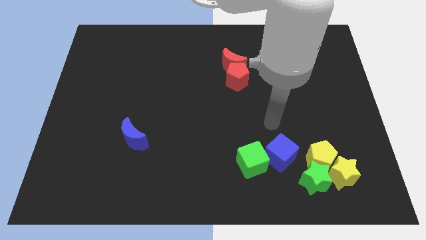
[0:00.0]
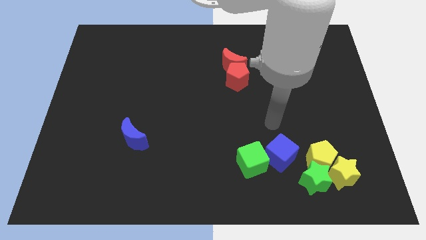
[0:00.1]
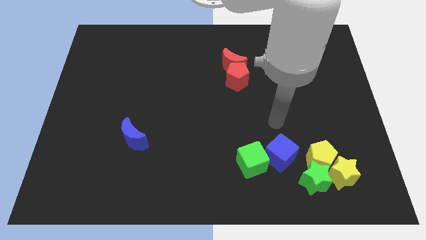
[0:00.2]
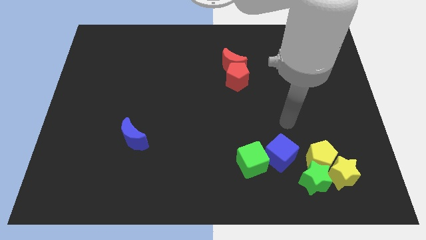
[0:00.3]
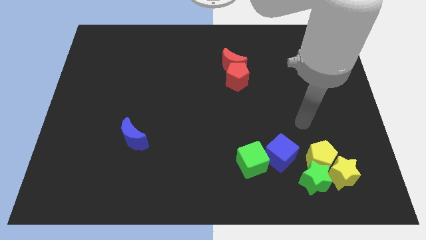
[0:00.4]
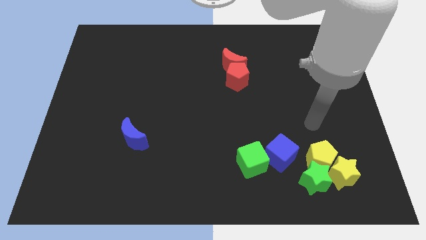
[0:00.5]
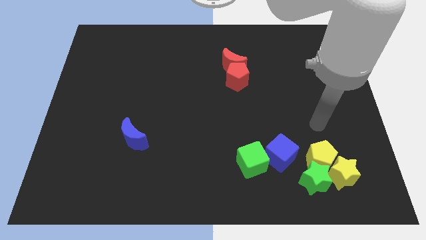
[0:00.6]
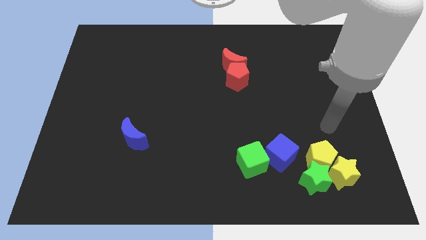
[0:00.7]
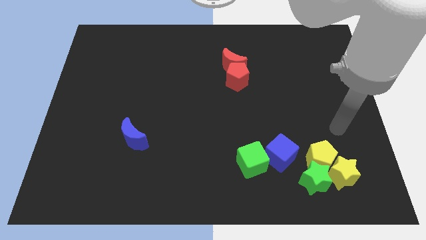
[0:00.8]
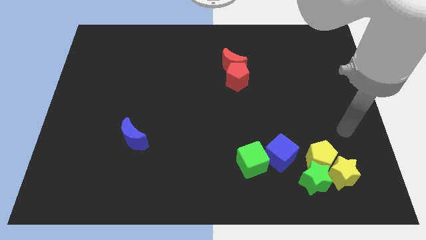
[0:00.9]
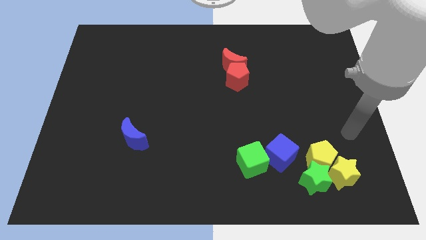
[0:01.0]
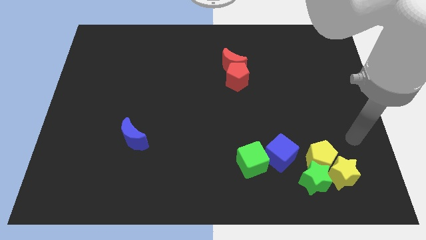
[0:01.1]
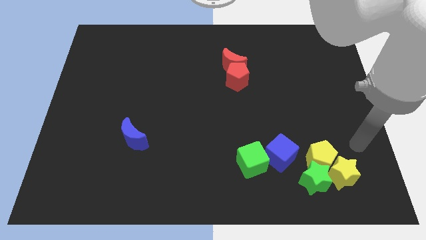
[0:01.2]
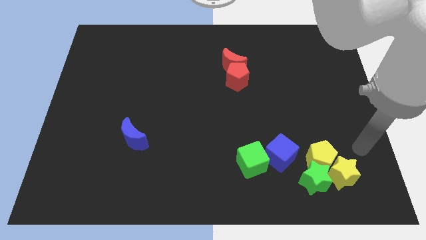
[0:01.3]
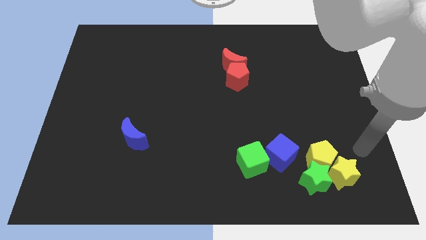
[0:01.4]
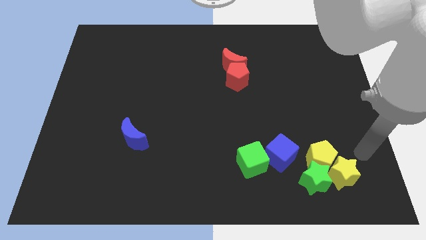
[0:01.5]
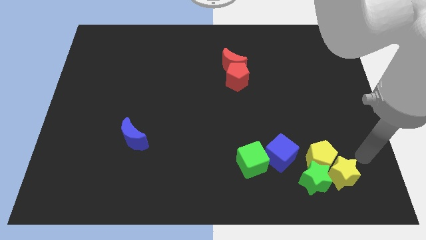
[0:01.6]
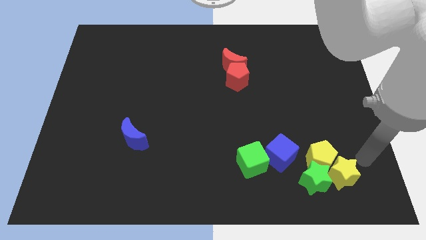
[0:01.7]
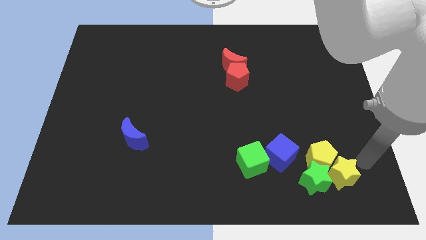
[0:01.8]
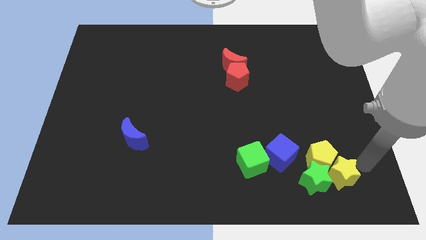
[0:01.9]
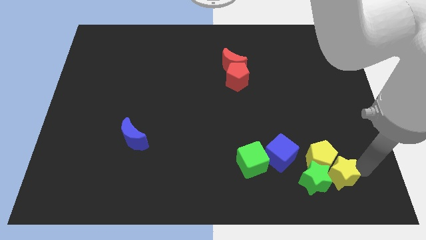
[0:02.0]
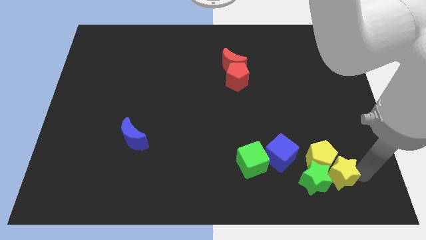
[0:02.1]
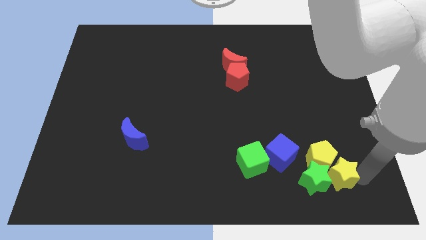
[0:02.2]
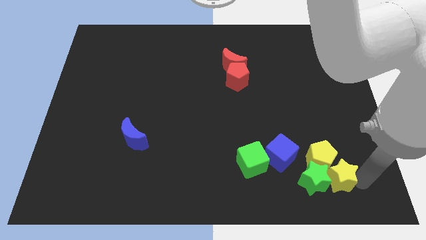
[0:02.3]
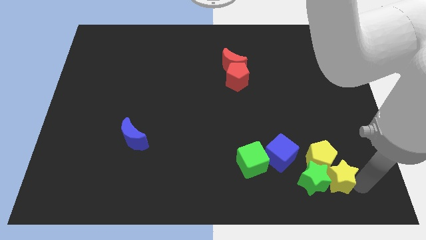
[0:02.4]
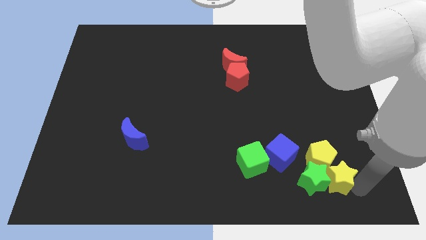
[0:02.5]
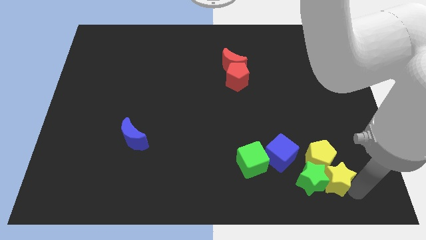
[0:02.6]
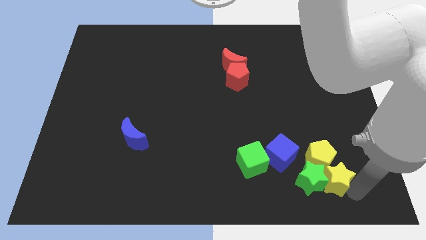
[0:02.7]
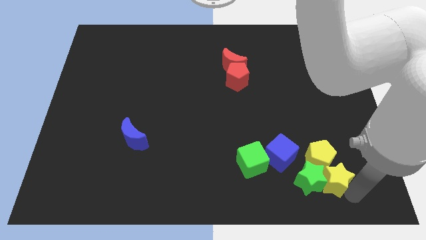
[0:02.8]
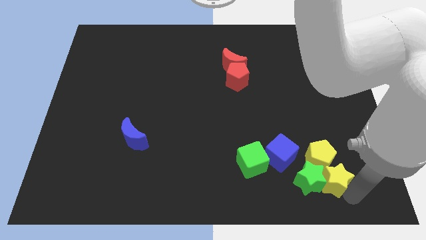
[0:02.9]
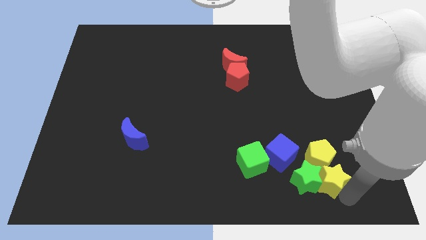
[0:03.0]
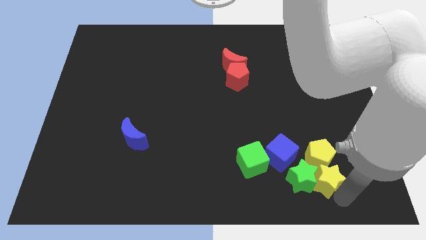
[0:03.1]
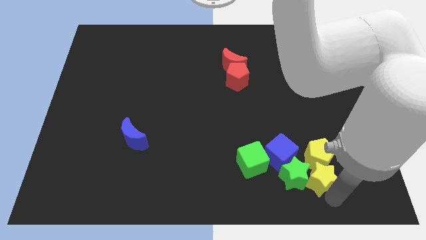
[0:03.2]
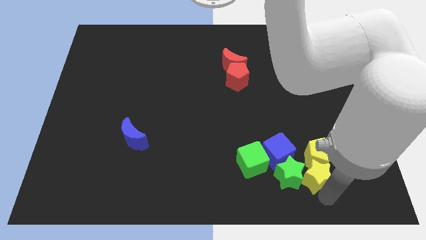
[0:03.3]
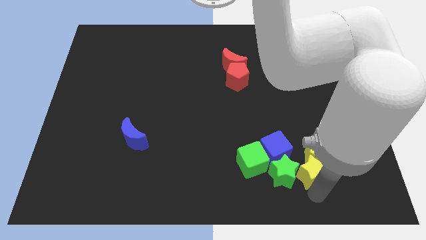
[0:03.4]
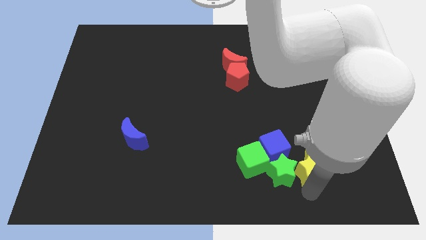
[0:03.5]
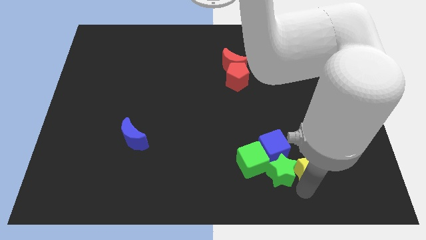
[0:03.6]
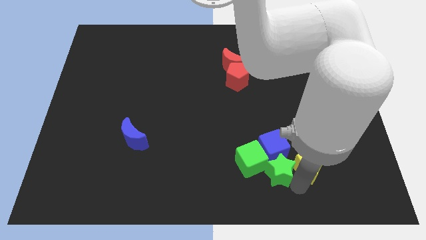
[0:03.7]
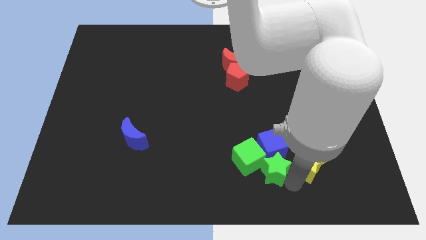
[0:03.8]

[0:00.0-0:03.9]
push the yellow and green stars into the group of blocks

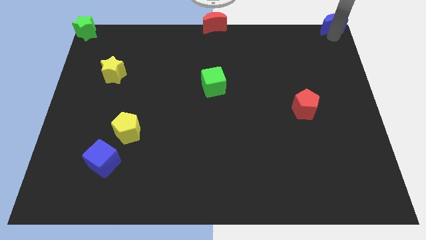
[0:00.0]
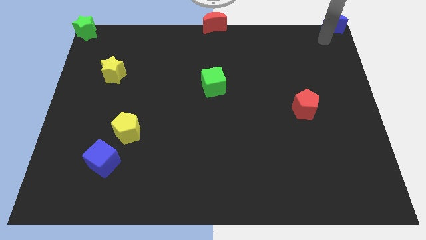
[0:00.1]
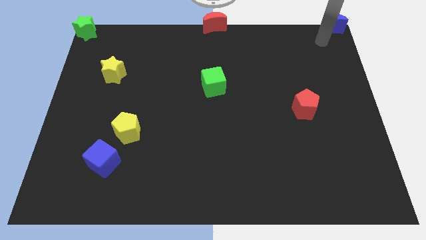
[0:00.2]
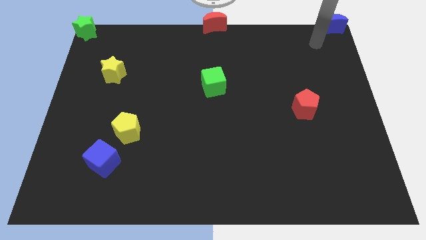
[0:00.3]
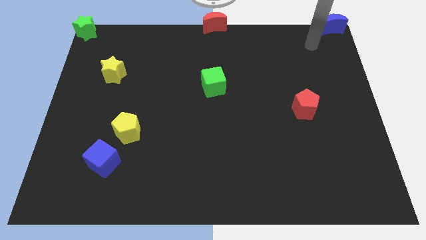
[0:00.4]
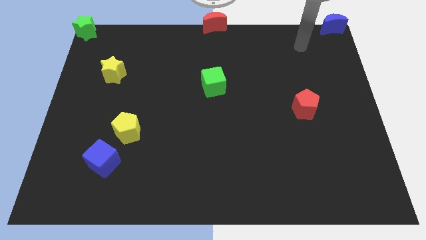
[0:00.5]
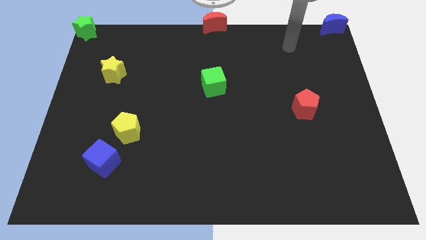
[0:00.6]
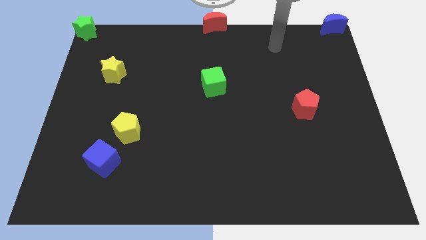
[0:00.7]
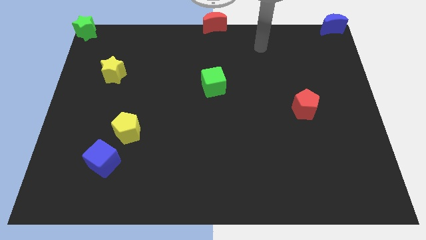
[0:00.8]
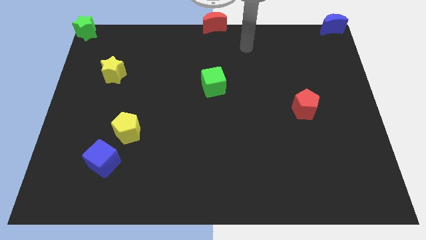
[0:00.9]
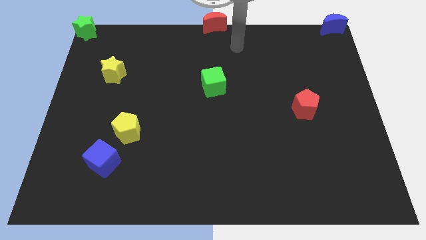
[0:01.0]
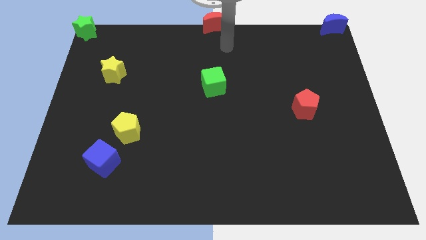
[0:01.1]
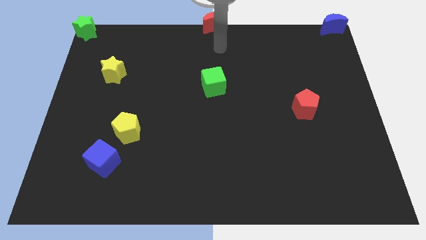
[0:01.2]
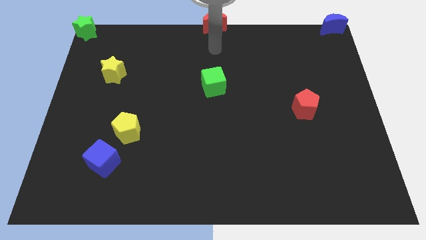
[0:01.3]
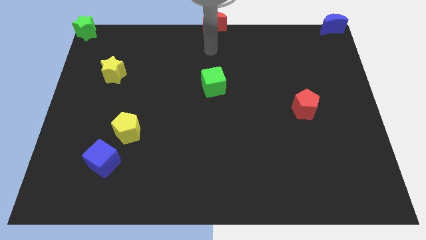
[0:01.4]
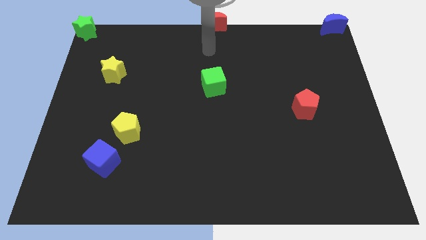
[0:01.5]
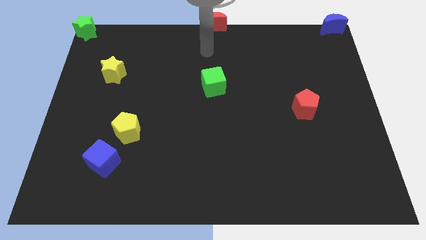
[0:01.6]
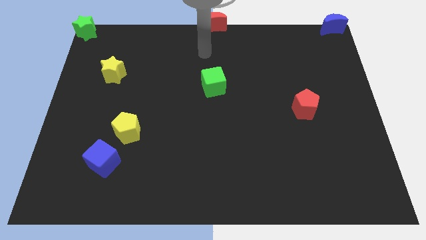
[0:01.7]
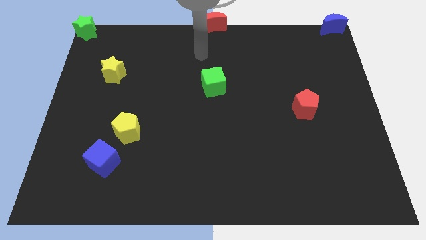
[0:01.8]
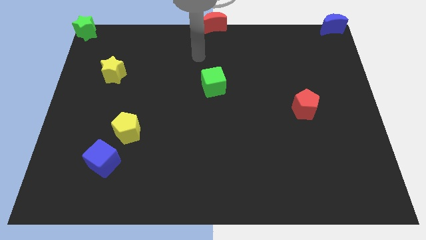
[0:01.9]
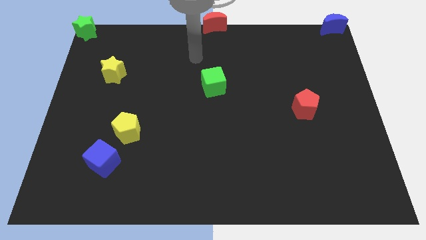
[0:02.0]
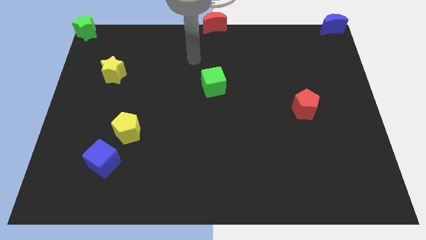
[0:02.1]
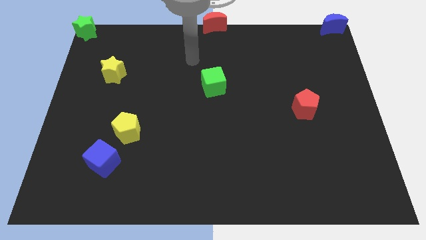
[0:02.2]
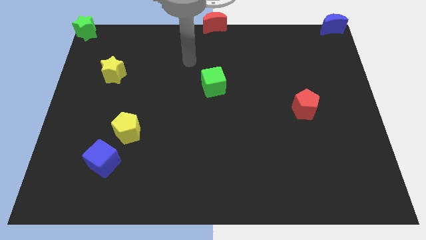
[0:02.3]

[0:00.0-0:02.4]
move the arm towards the top left of the green cube

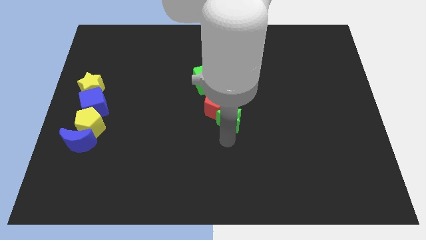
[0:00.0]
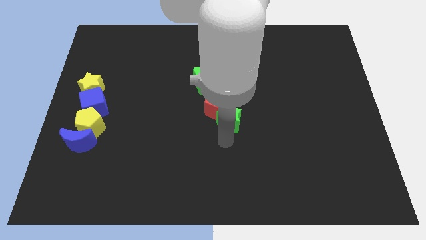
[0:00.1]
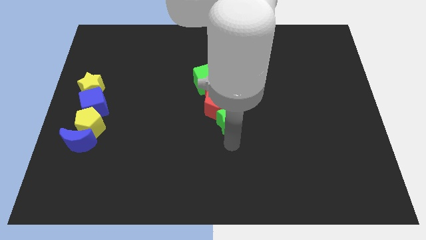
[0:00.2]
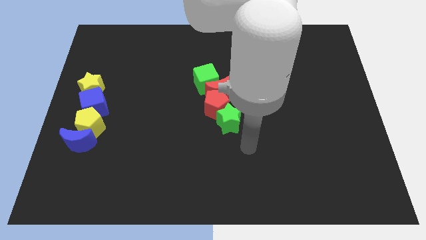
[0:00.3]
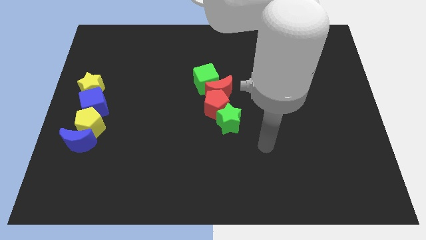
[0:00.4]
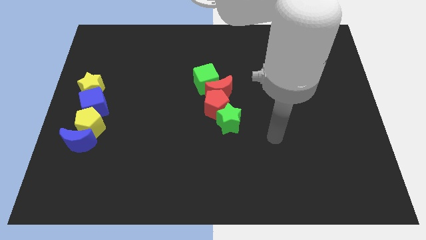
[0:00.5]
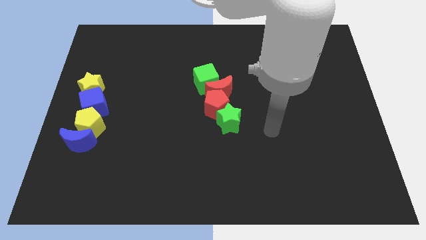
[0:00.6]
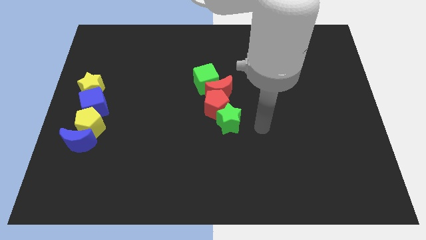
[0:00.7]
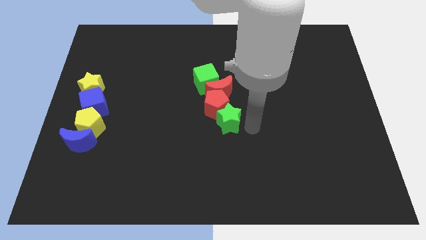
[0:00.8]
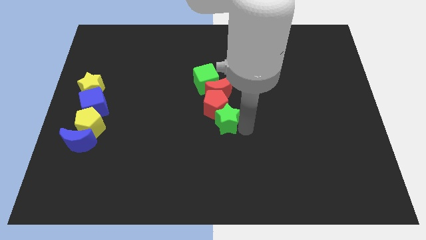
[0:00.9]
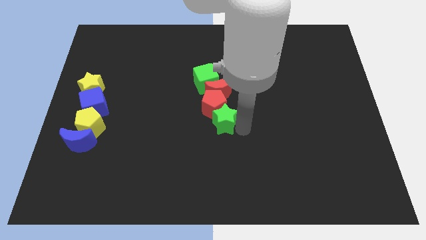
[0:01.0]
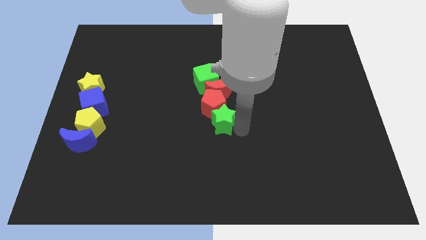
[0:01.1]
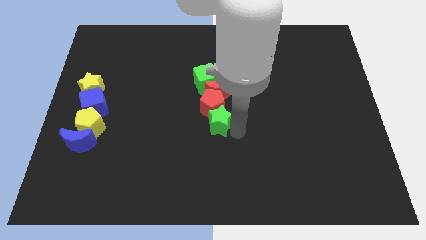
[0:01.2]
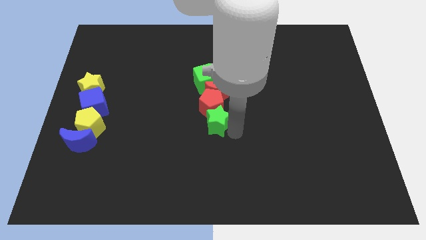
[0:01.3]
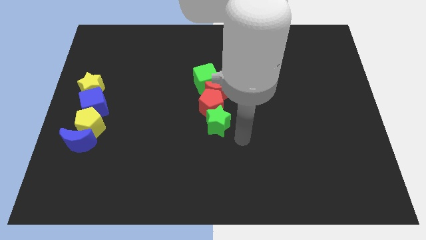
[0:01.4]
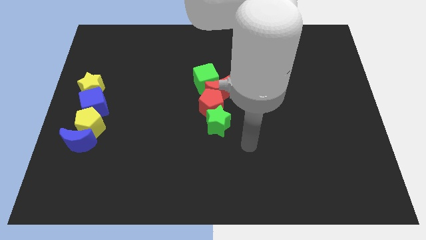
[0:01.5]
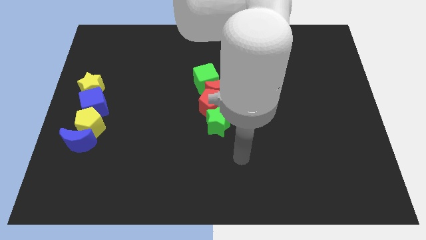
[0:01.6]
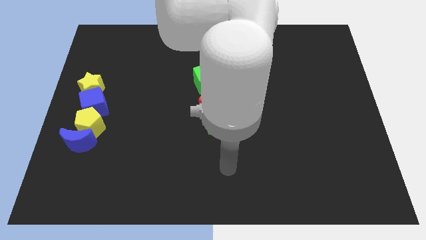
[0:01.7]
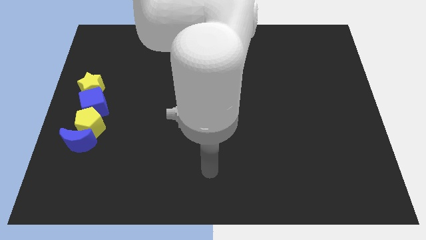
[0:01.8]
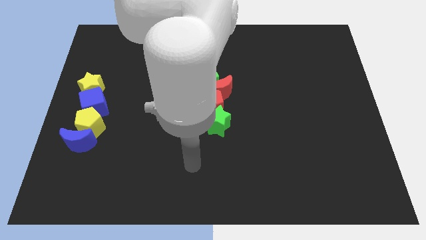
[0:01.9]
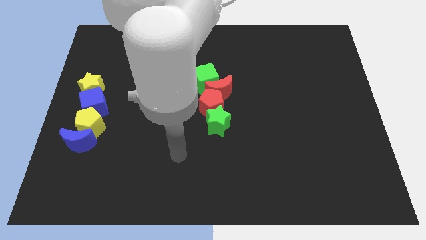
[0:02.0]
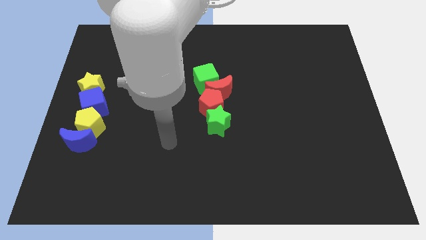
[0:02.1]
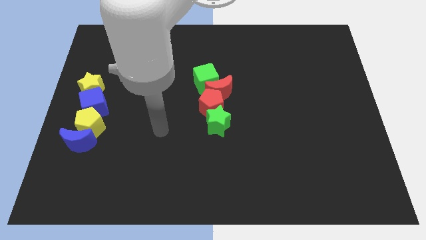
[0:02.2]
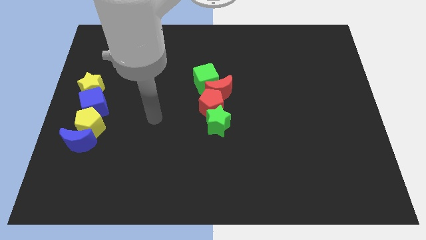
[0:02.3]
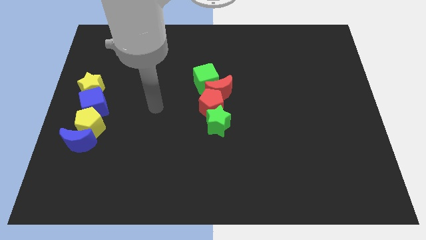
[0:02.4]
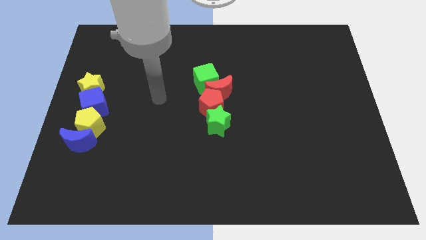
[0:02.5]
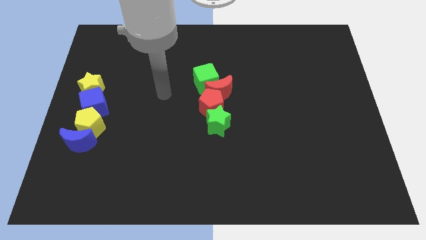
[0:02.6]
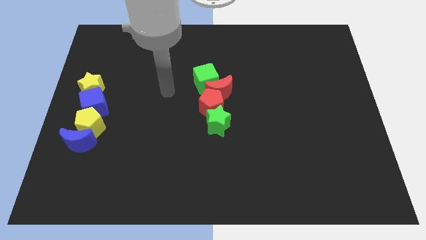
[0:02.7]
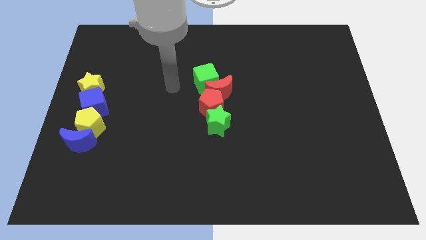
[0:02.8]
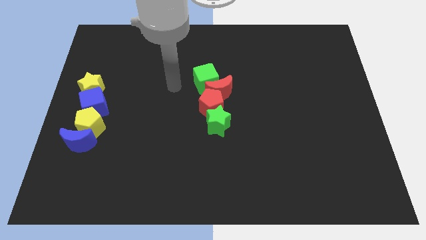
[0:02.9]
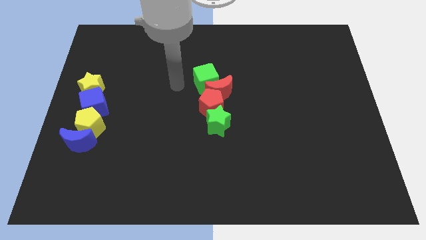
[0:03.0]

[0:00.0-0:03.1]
push the green star slightly to the left
